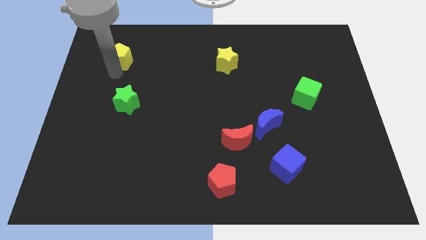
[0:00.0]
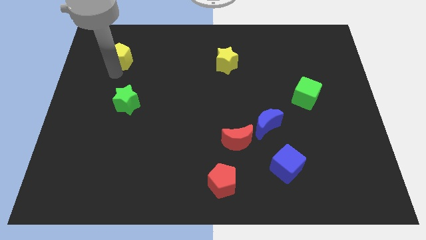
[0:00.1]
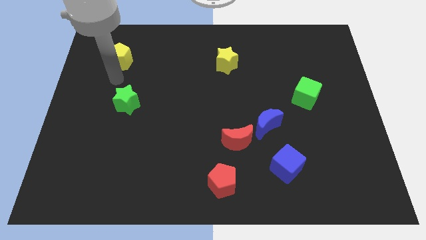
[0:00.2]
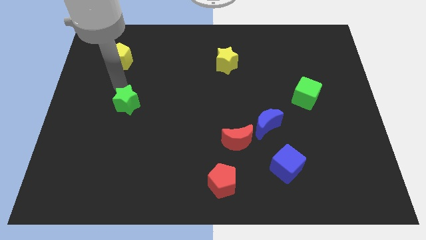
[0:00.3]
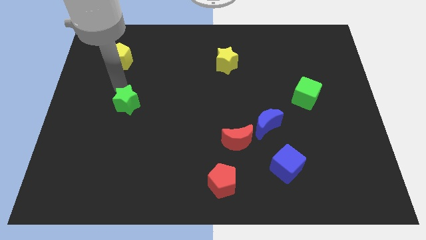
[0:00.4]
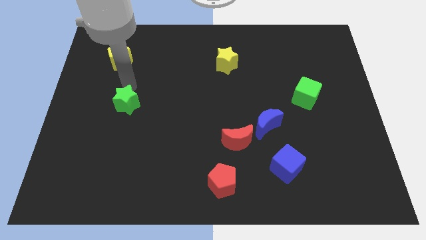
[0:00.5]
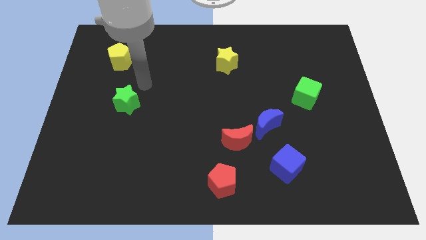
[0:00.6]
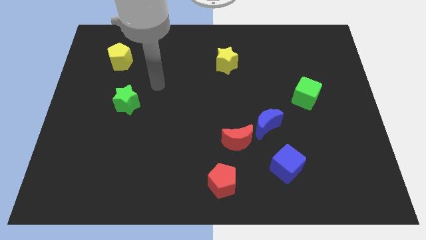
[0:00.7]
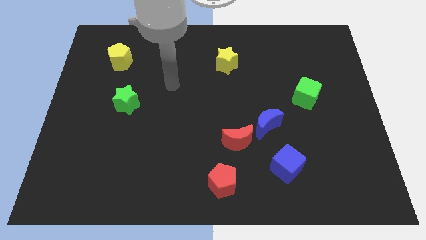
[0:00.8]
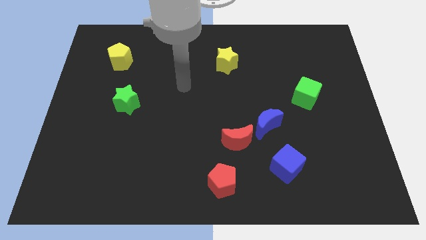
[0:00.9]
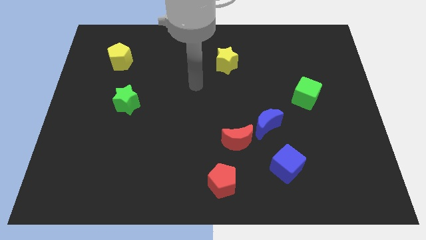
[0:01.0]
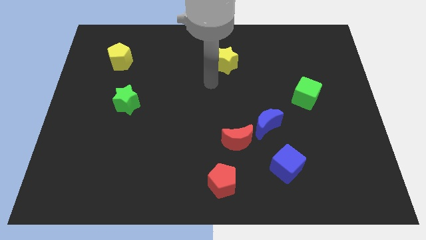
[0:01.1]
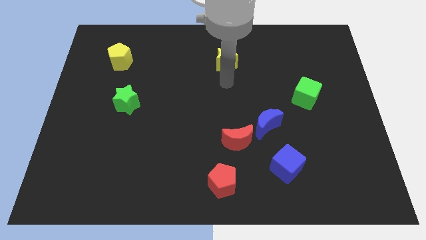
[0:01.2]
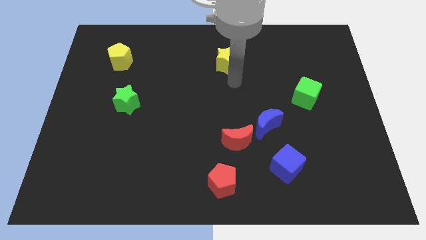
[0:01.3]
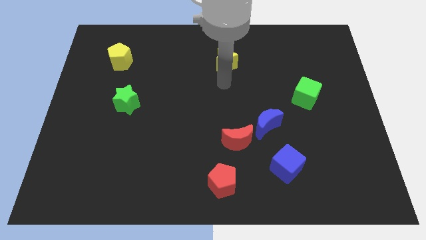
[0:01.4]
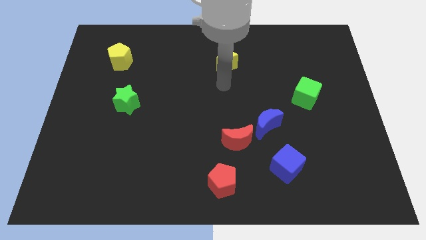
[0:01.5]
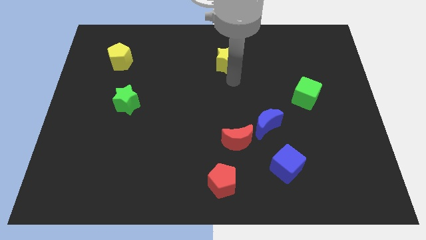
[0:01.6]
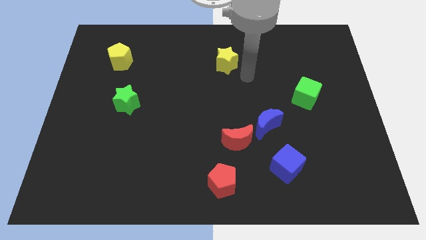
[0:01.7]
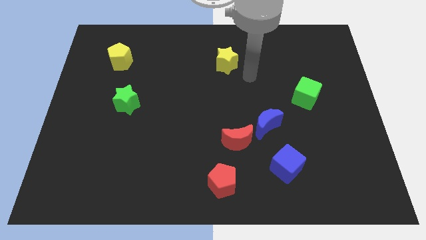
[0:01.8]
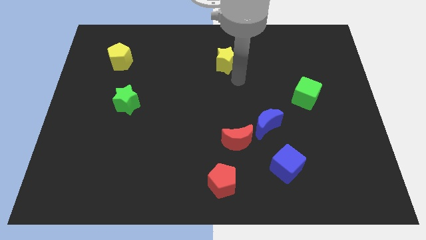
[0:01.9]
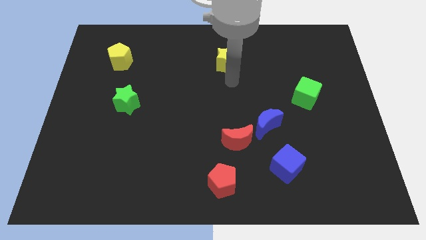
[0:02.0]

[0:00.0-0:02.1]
point your arm below yellow star

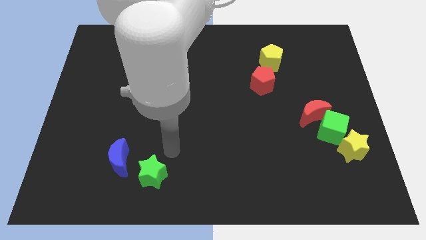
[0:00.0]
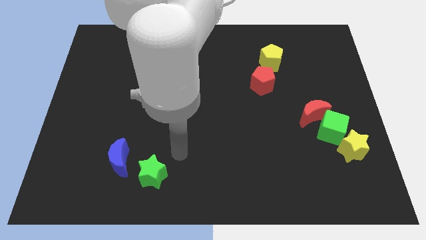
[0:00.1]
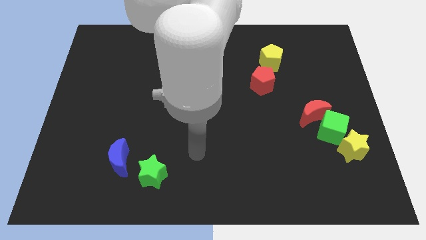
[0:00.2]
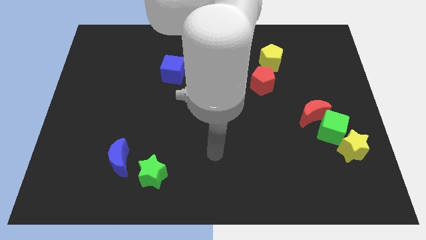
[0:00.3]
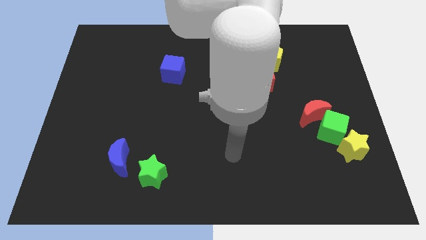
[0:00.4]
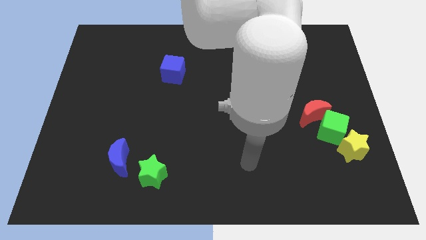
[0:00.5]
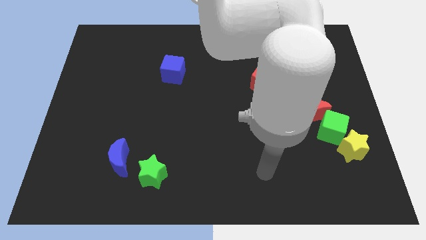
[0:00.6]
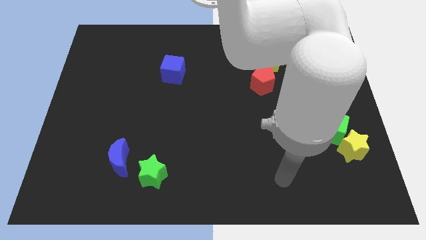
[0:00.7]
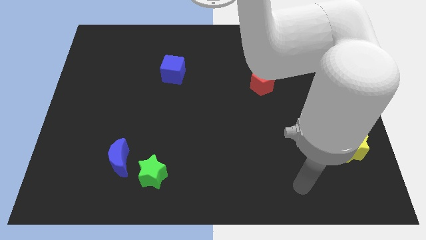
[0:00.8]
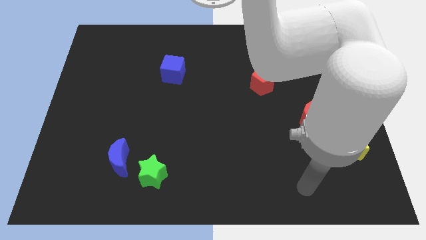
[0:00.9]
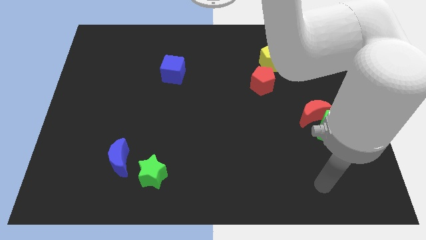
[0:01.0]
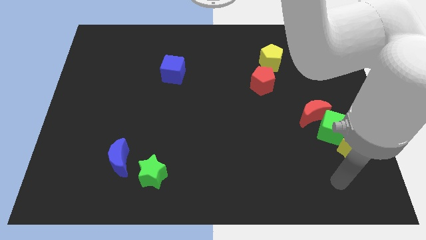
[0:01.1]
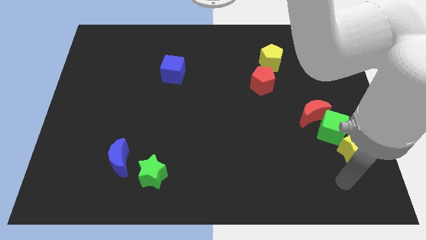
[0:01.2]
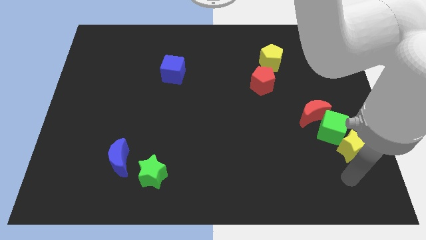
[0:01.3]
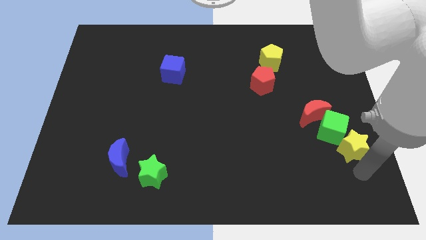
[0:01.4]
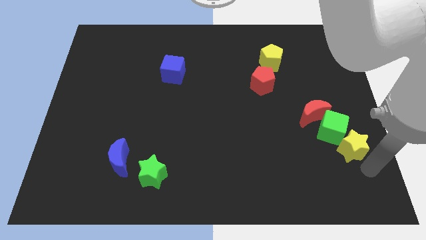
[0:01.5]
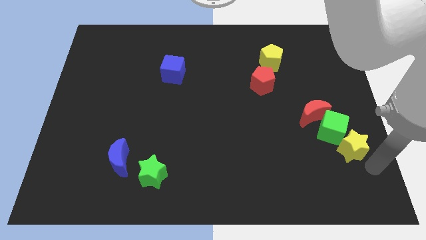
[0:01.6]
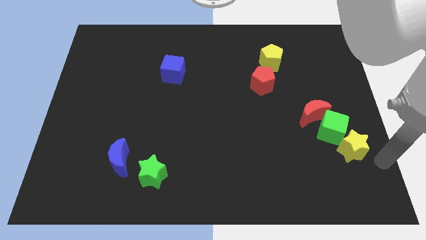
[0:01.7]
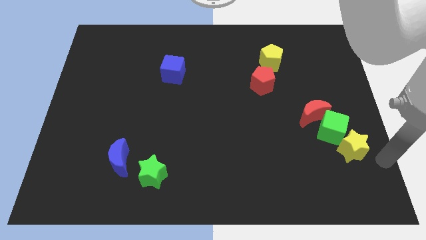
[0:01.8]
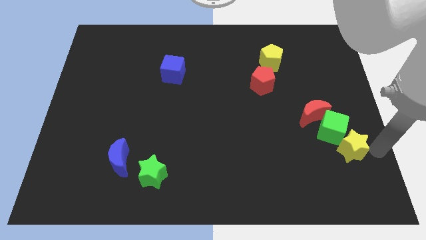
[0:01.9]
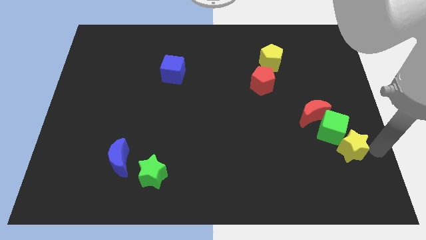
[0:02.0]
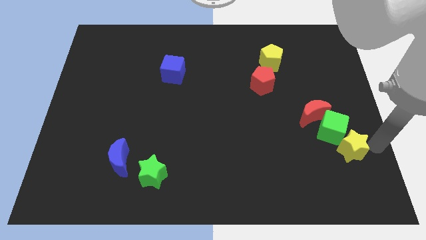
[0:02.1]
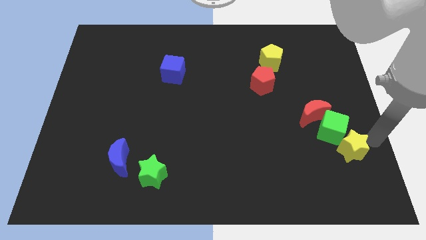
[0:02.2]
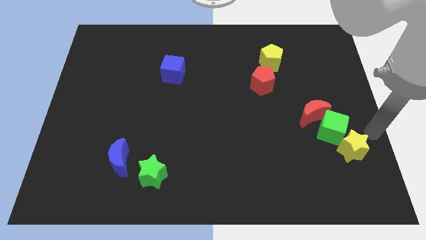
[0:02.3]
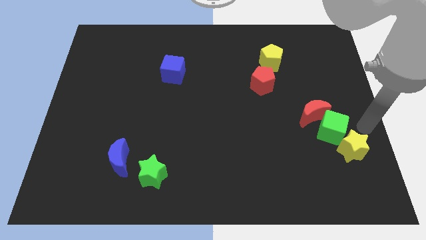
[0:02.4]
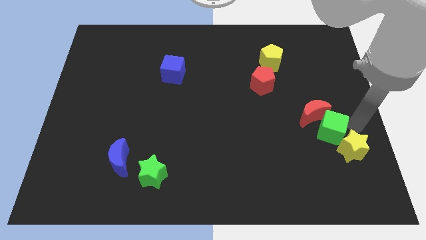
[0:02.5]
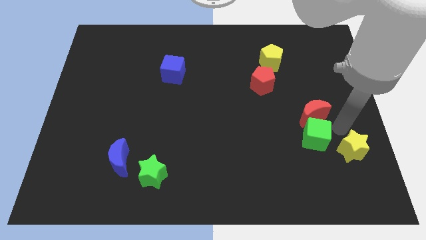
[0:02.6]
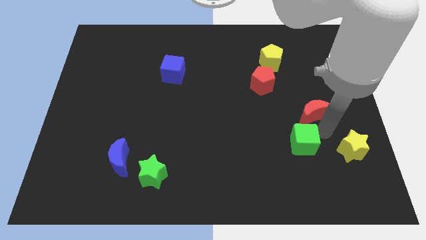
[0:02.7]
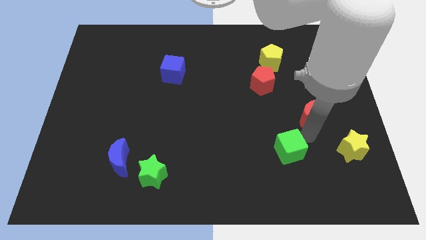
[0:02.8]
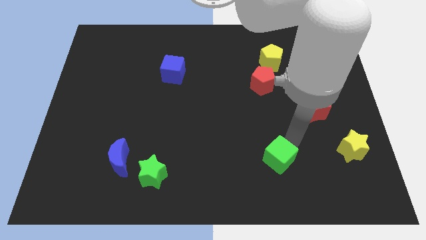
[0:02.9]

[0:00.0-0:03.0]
separate the green cube from the red crescent and yellow star

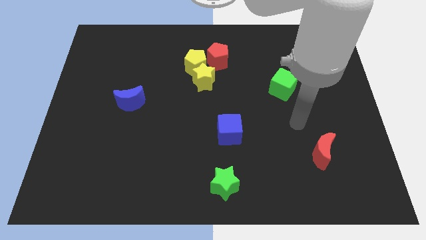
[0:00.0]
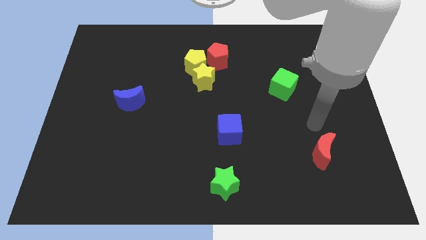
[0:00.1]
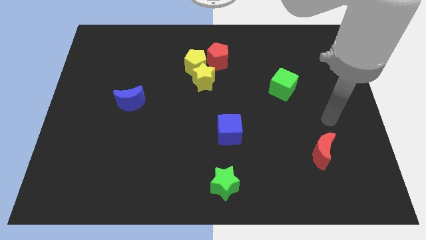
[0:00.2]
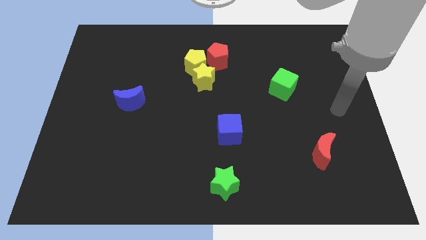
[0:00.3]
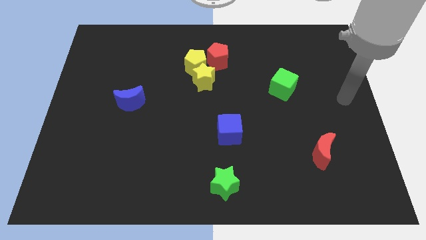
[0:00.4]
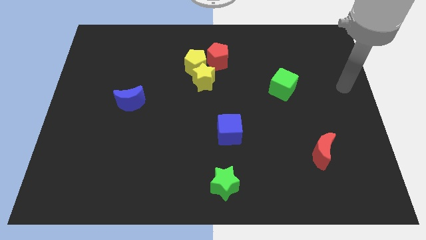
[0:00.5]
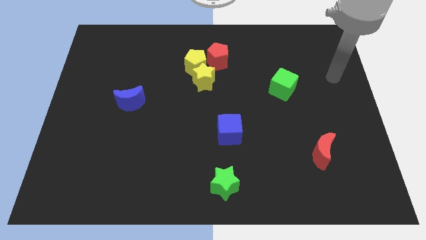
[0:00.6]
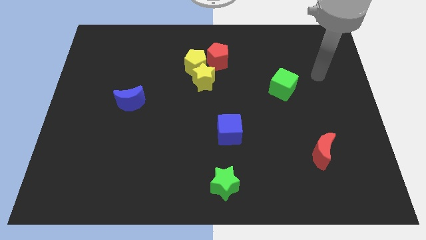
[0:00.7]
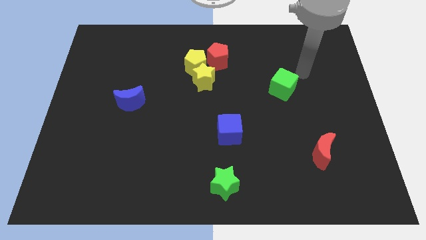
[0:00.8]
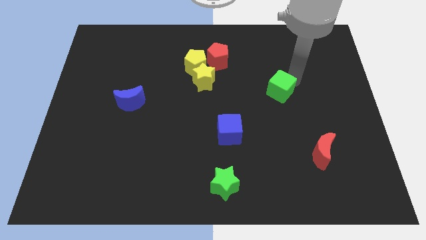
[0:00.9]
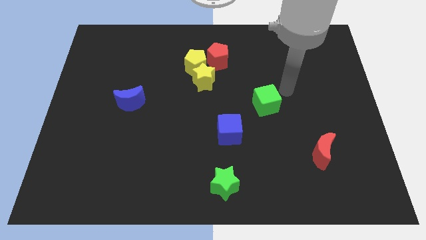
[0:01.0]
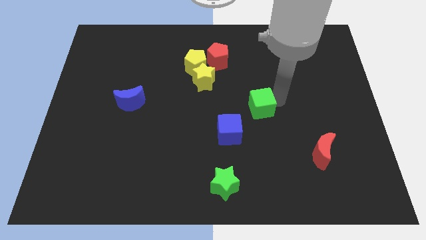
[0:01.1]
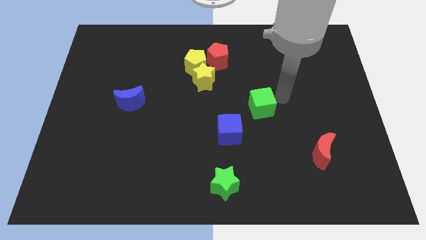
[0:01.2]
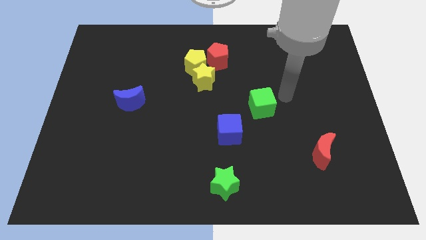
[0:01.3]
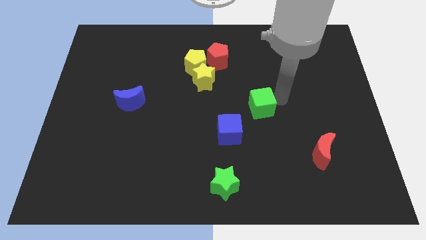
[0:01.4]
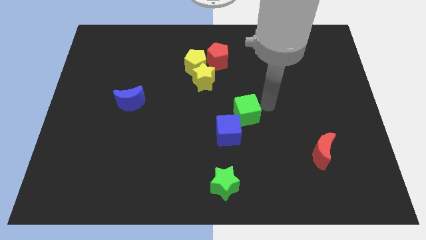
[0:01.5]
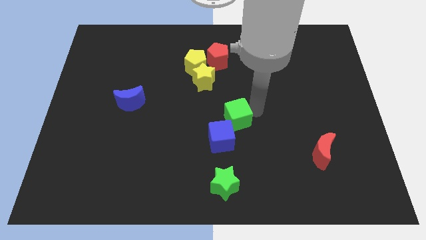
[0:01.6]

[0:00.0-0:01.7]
push the green cube into the blue cube

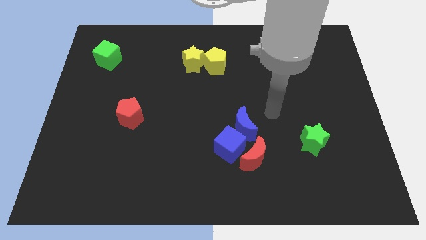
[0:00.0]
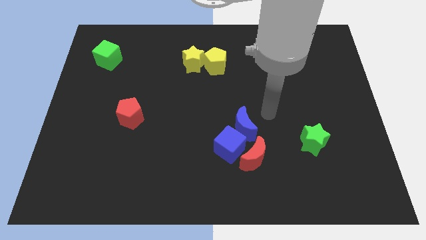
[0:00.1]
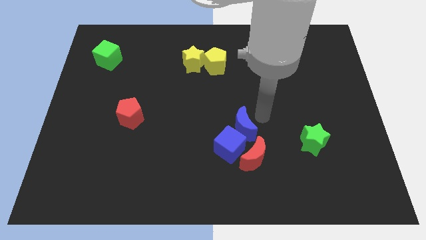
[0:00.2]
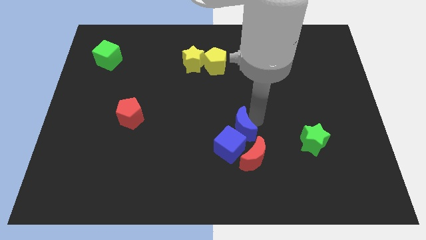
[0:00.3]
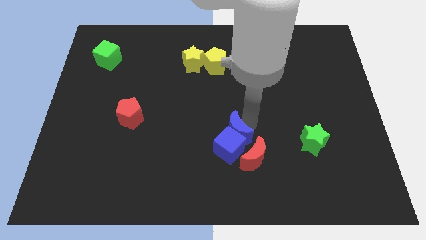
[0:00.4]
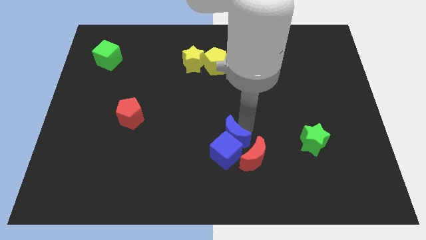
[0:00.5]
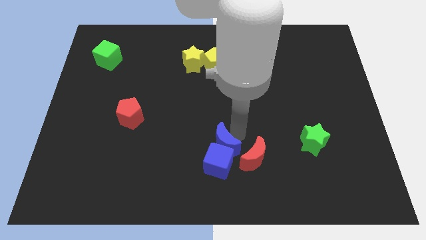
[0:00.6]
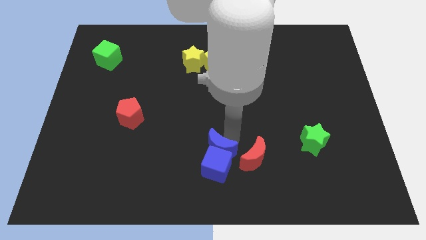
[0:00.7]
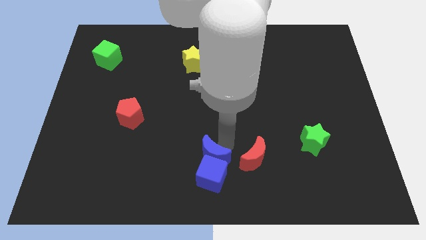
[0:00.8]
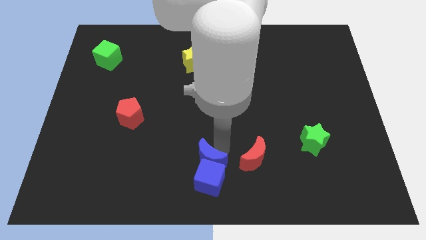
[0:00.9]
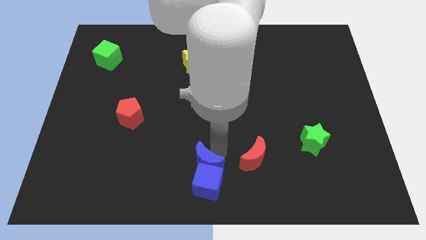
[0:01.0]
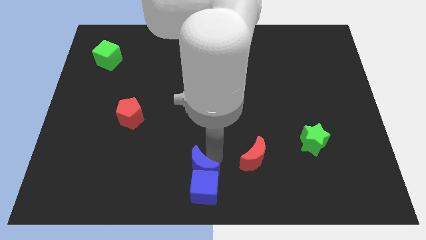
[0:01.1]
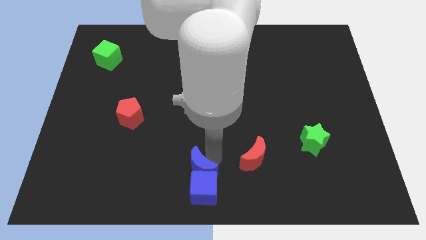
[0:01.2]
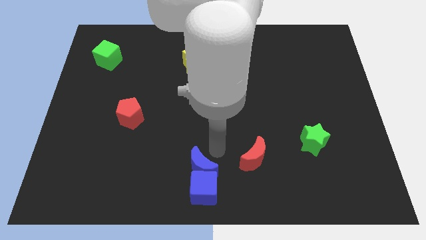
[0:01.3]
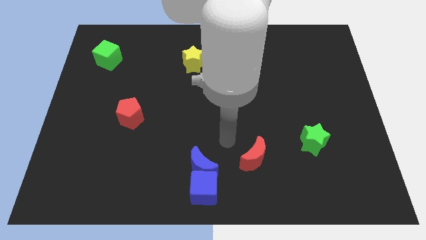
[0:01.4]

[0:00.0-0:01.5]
push blue cube and blue crescent towards the bottom center of the board

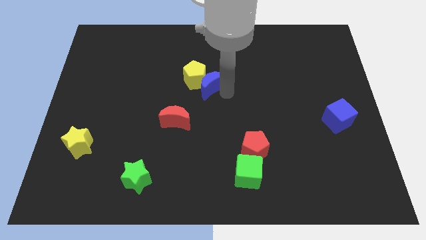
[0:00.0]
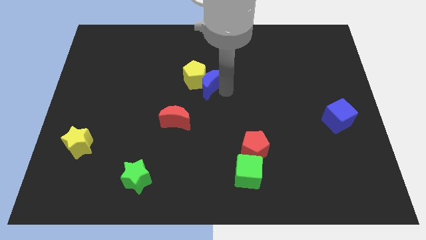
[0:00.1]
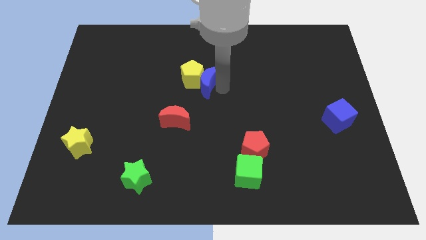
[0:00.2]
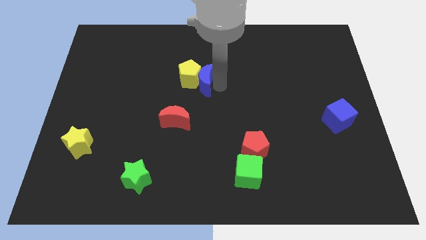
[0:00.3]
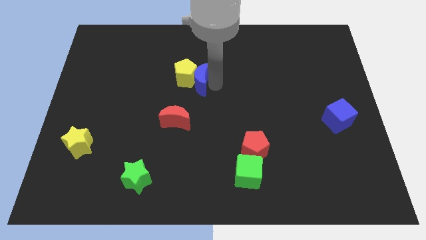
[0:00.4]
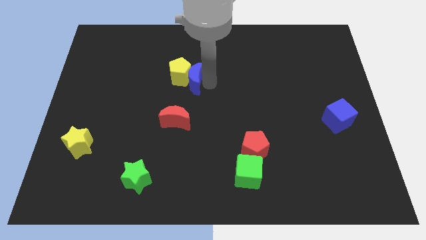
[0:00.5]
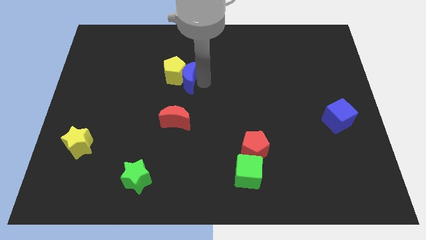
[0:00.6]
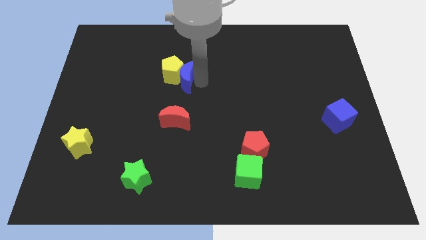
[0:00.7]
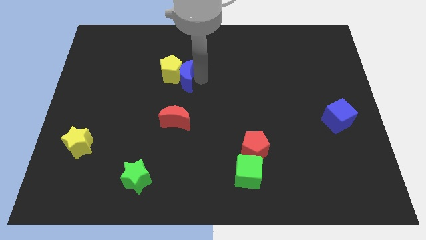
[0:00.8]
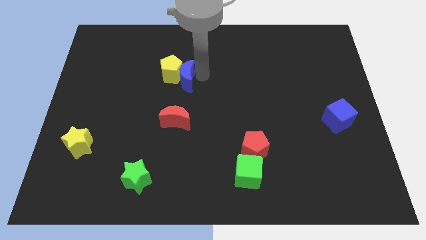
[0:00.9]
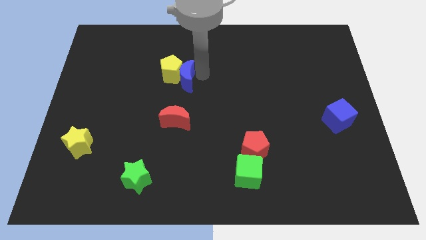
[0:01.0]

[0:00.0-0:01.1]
move the yellow pentagon and blue crescent to the left side of the table
